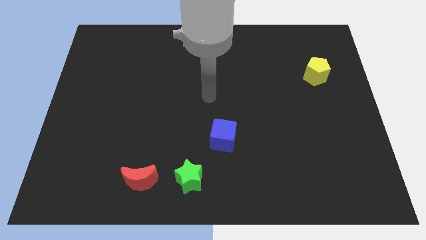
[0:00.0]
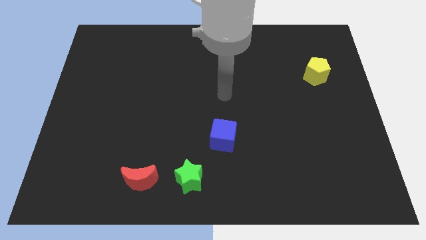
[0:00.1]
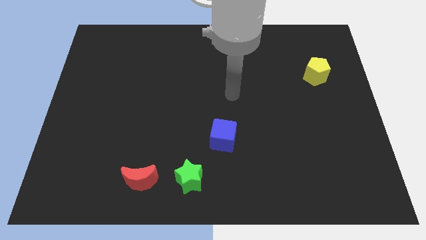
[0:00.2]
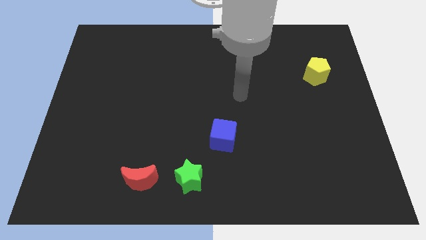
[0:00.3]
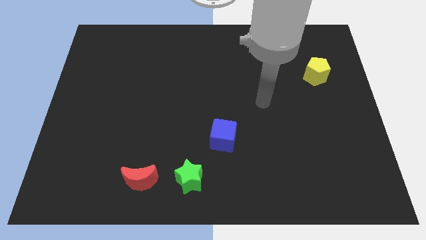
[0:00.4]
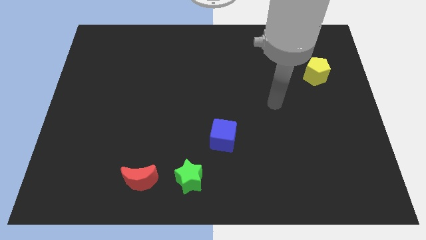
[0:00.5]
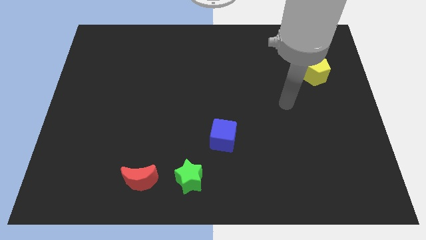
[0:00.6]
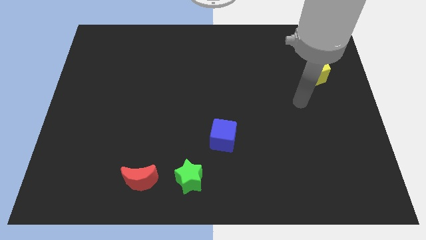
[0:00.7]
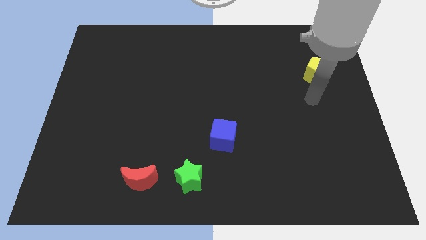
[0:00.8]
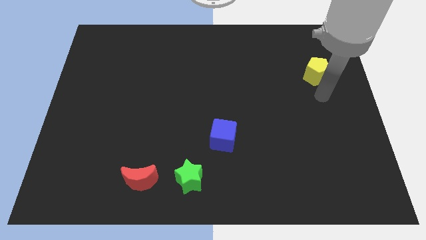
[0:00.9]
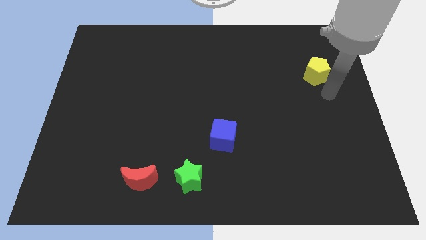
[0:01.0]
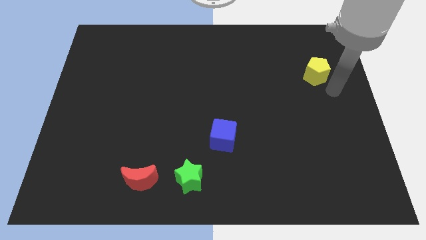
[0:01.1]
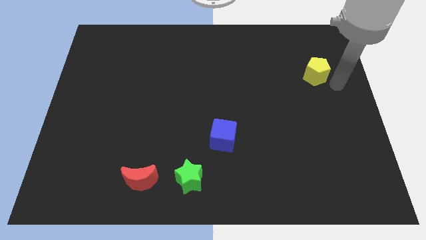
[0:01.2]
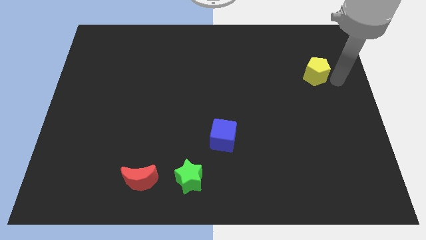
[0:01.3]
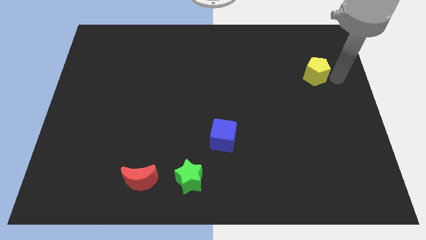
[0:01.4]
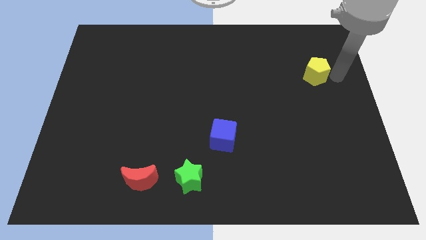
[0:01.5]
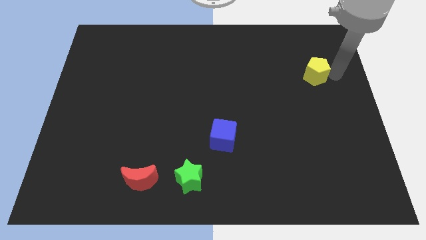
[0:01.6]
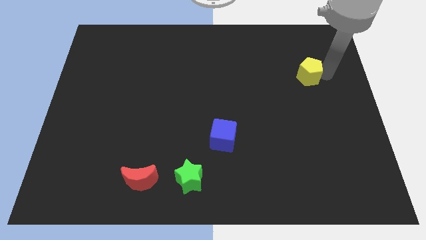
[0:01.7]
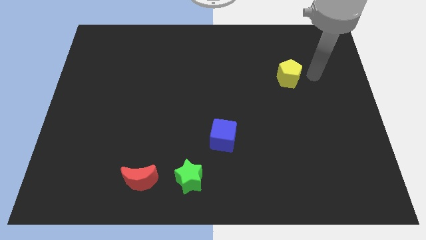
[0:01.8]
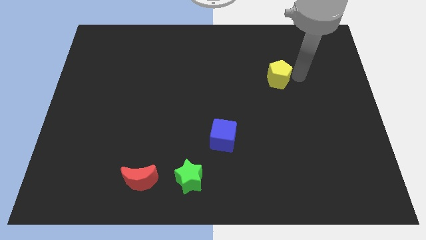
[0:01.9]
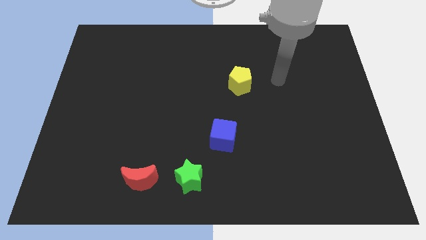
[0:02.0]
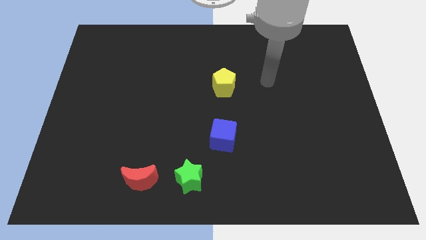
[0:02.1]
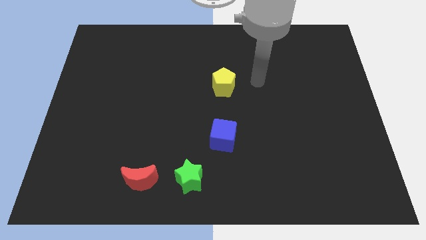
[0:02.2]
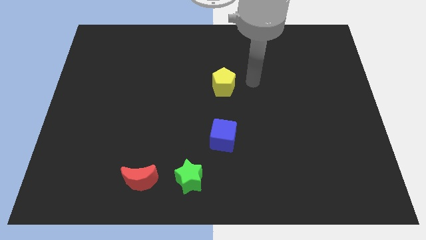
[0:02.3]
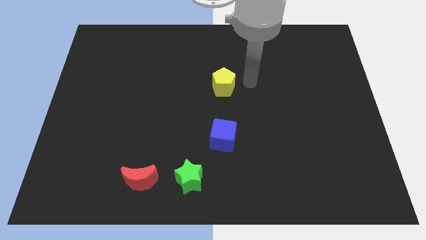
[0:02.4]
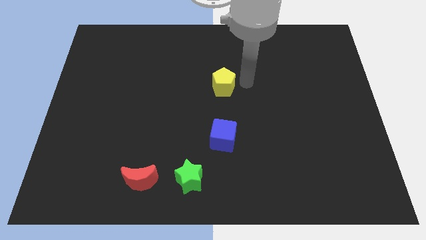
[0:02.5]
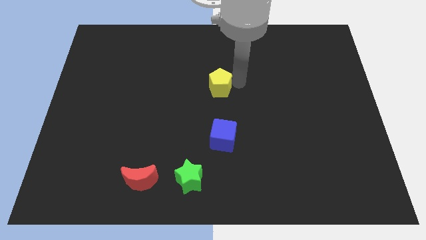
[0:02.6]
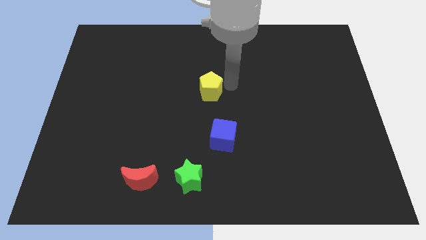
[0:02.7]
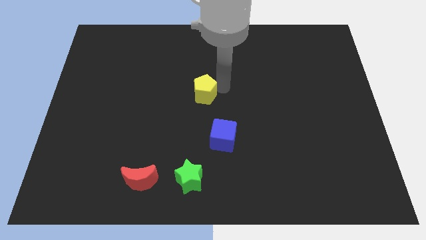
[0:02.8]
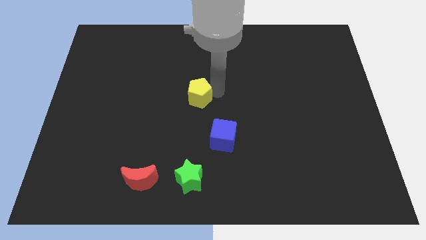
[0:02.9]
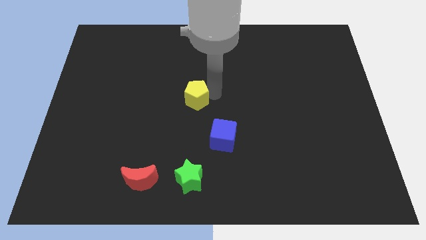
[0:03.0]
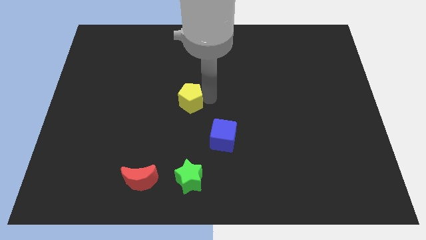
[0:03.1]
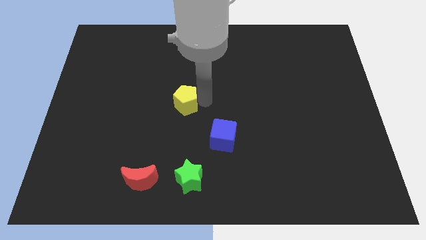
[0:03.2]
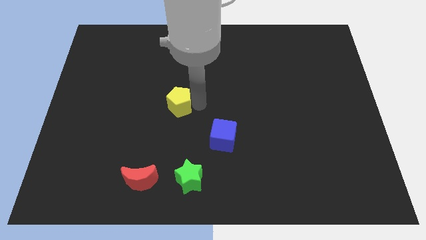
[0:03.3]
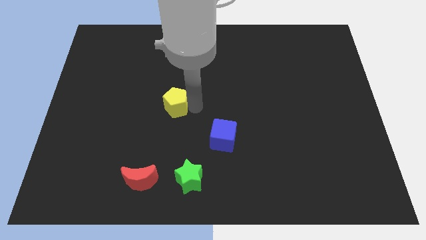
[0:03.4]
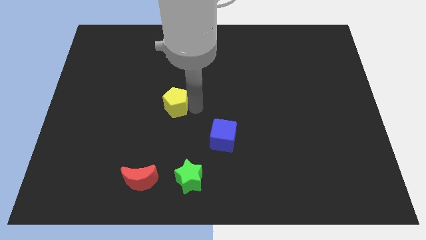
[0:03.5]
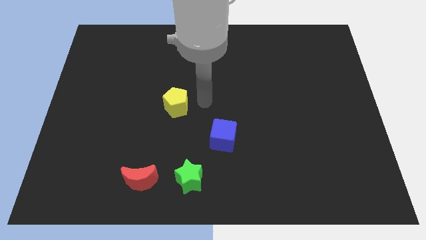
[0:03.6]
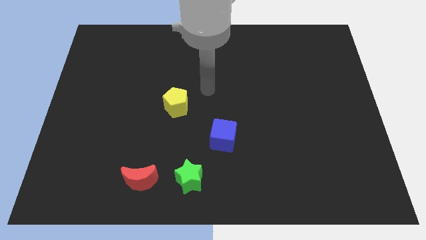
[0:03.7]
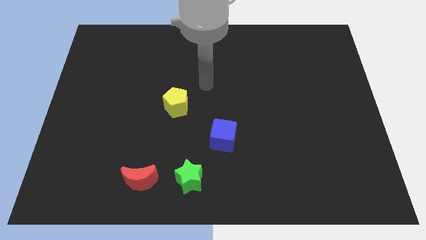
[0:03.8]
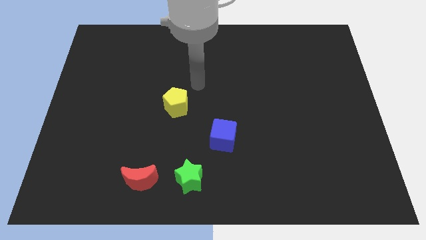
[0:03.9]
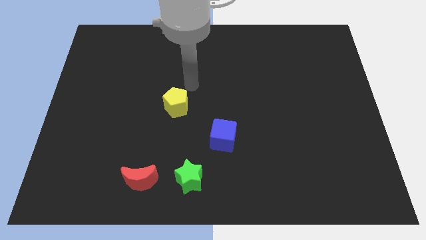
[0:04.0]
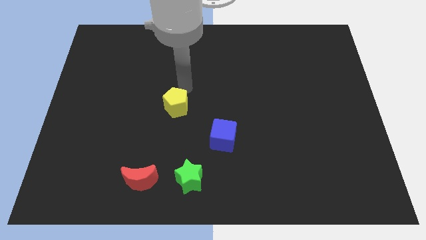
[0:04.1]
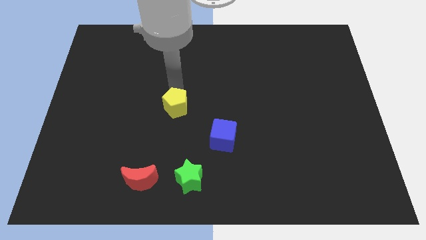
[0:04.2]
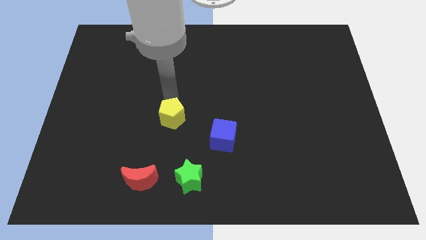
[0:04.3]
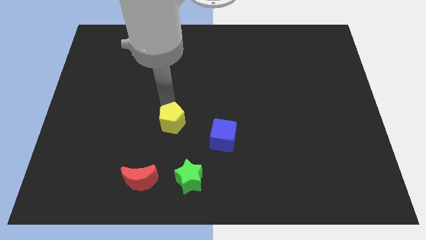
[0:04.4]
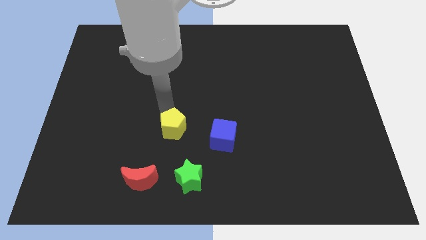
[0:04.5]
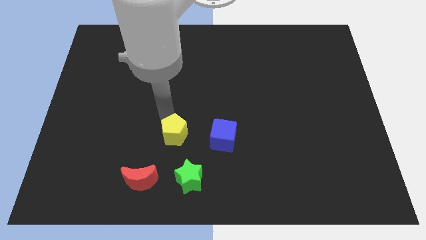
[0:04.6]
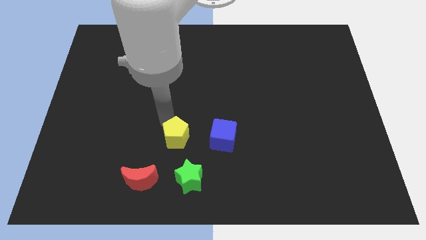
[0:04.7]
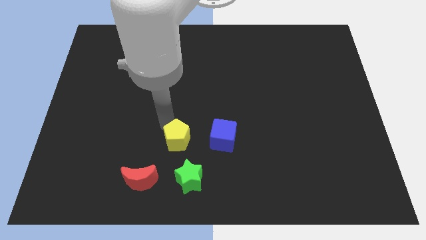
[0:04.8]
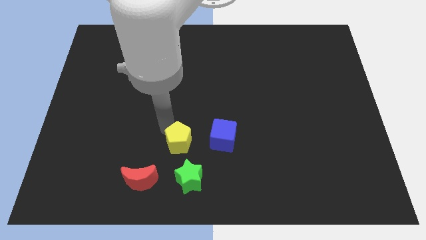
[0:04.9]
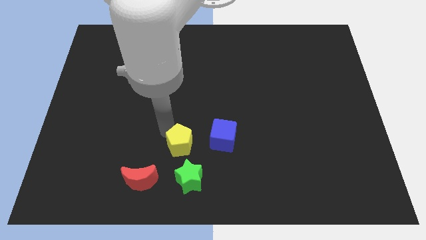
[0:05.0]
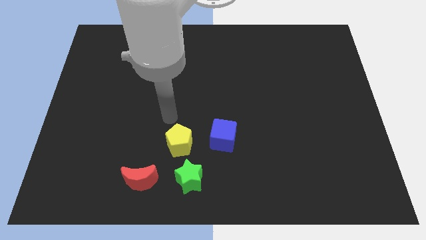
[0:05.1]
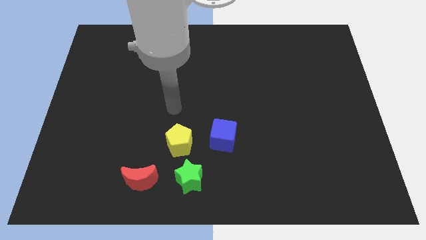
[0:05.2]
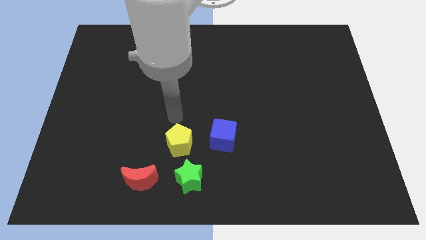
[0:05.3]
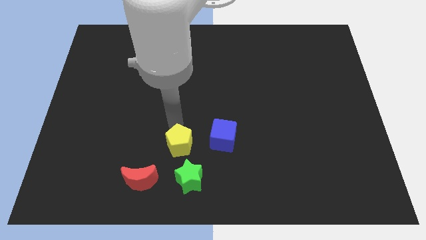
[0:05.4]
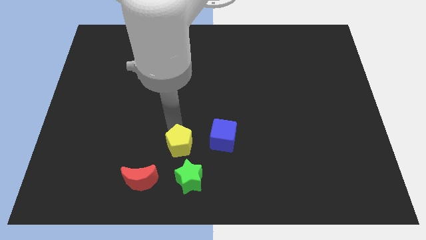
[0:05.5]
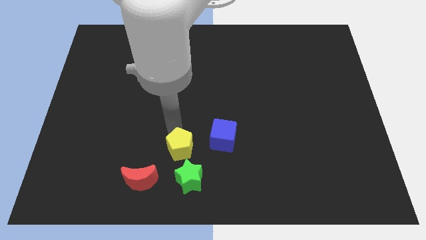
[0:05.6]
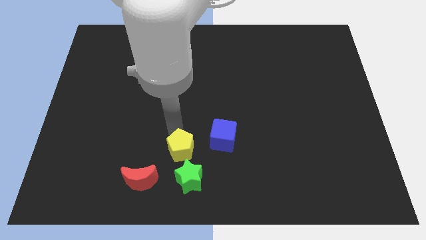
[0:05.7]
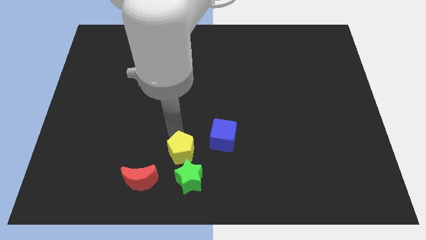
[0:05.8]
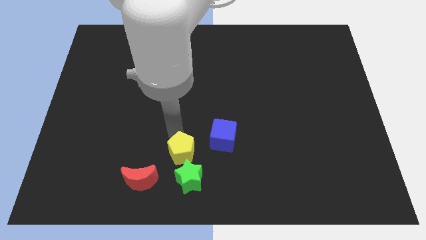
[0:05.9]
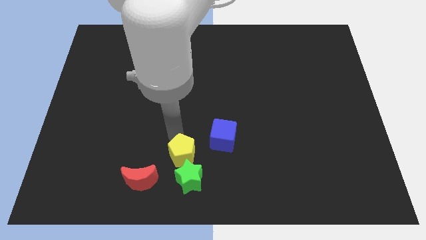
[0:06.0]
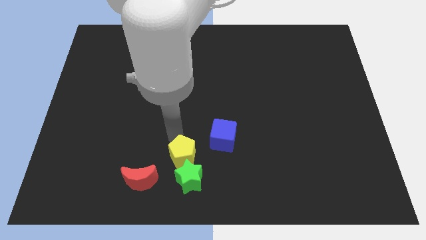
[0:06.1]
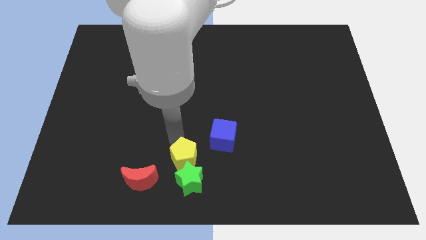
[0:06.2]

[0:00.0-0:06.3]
move the yellow pentagon to the green block

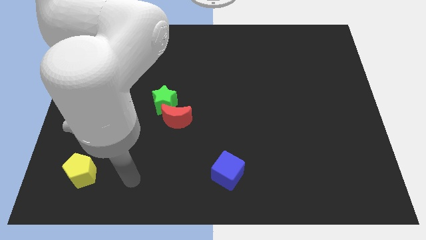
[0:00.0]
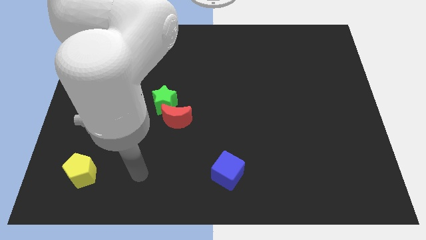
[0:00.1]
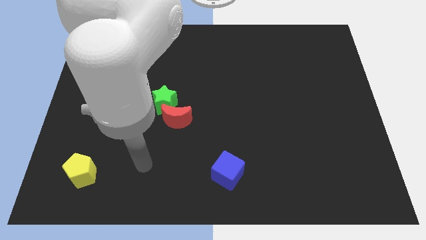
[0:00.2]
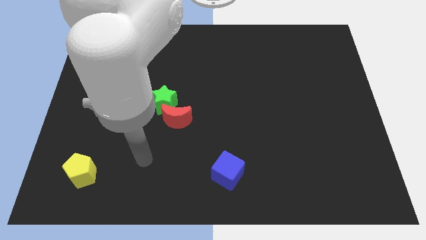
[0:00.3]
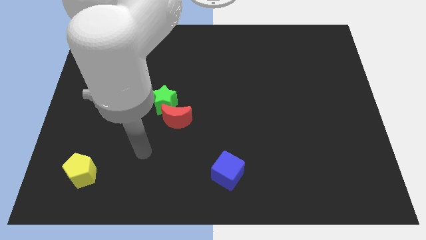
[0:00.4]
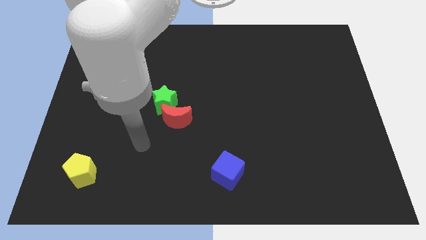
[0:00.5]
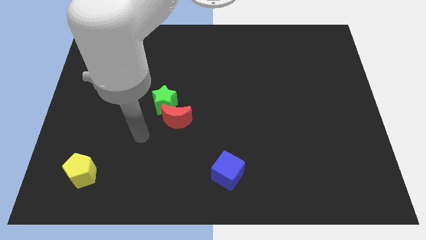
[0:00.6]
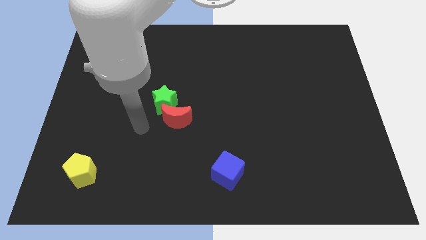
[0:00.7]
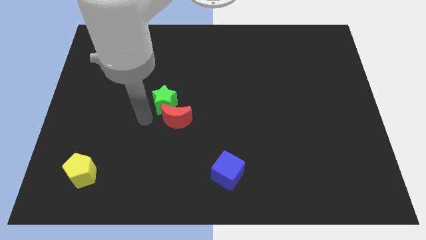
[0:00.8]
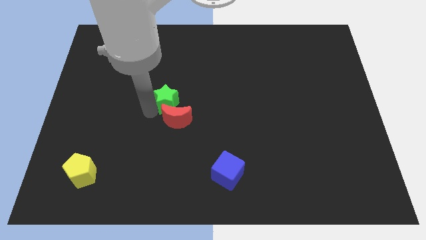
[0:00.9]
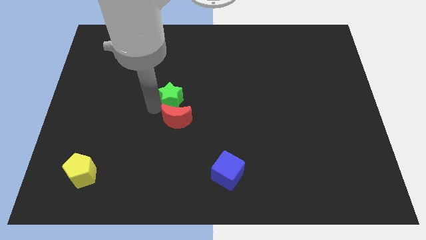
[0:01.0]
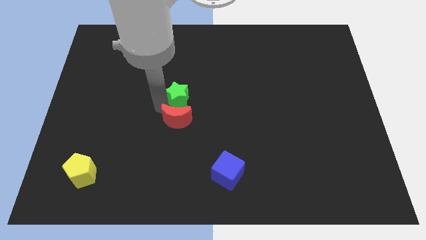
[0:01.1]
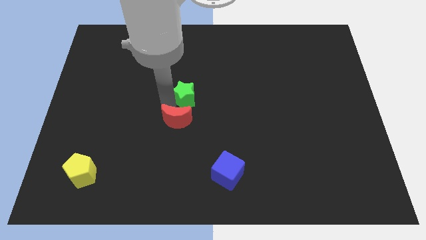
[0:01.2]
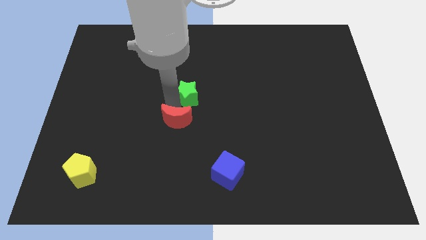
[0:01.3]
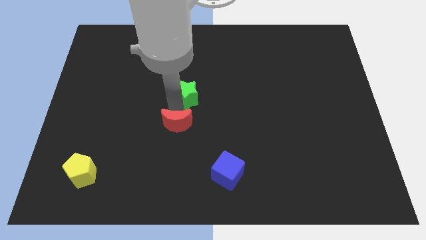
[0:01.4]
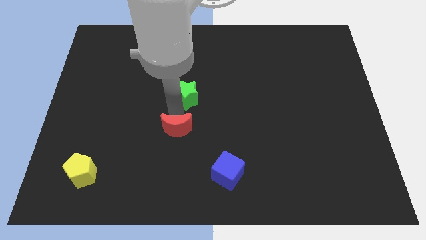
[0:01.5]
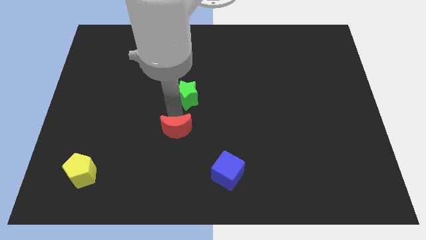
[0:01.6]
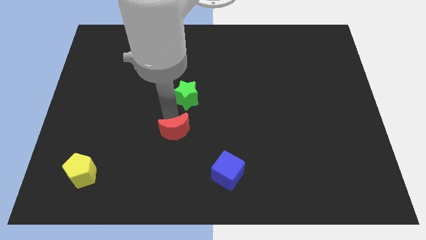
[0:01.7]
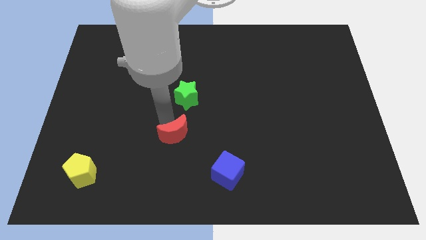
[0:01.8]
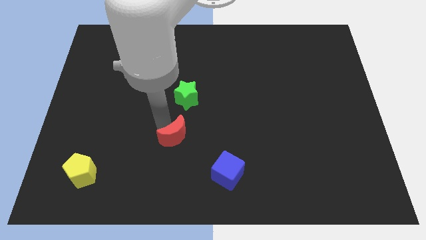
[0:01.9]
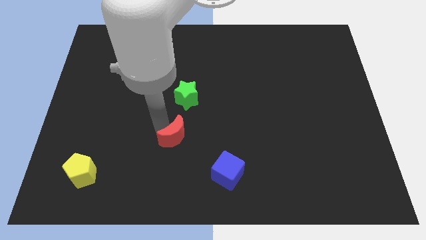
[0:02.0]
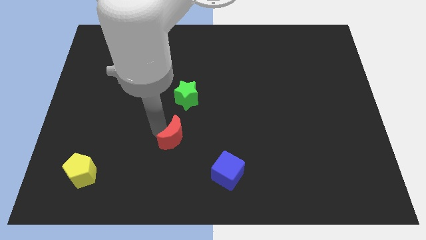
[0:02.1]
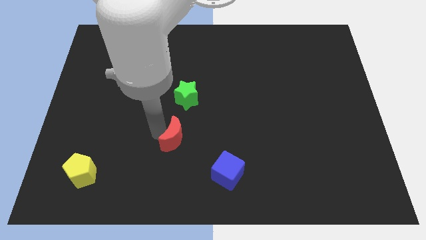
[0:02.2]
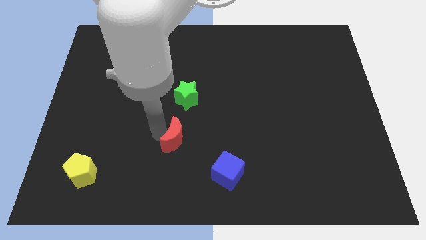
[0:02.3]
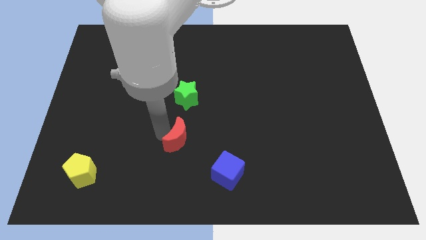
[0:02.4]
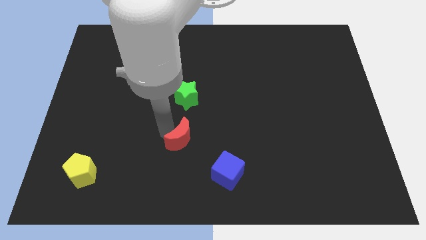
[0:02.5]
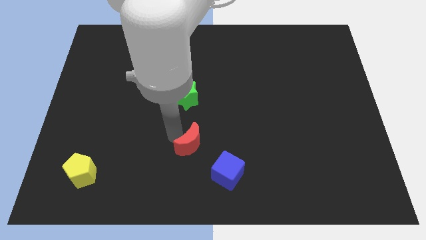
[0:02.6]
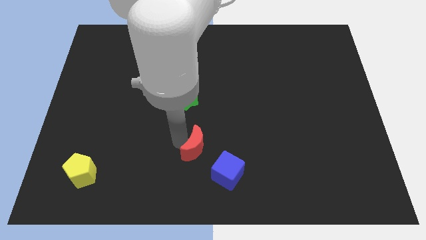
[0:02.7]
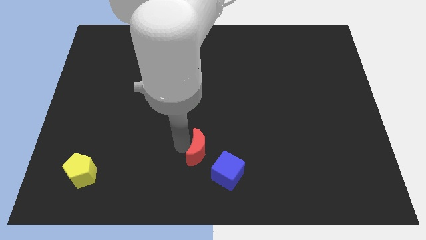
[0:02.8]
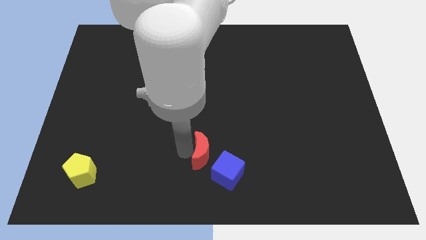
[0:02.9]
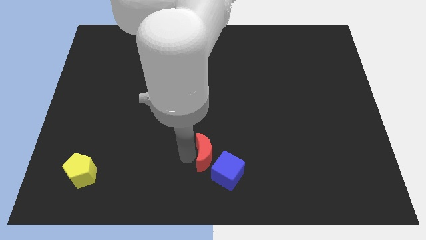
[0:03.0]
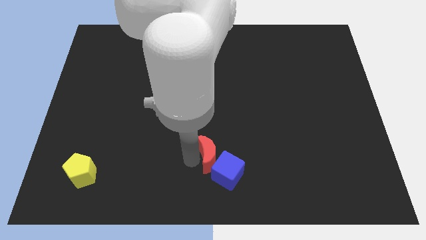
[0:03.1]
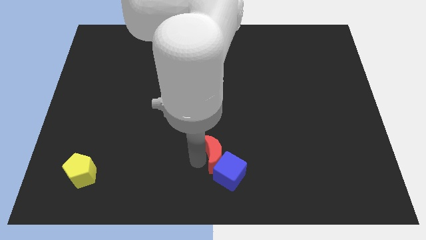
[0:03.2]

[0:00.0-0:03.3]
move the red block towards the cube
